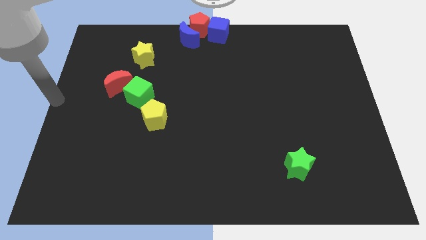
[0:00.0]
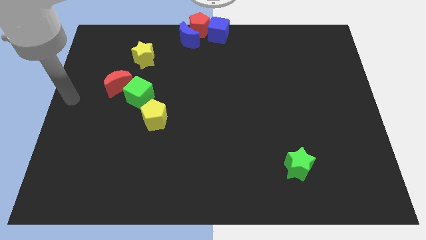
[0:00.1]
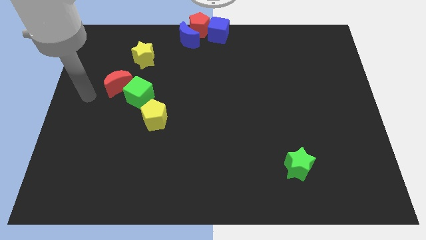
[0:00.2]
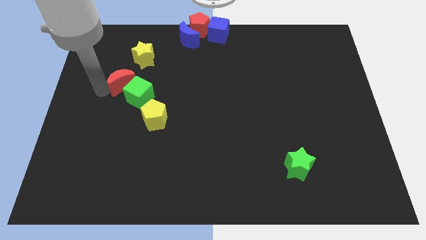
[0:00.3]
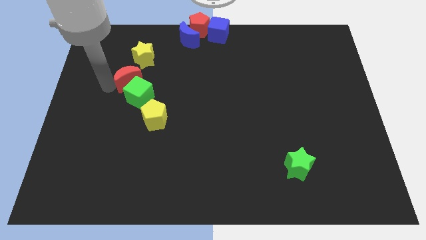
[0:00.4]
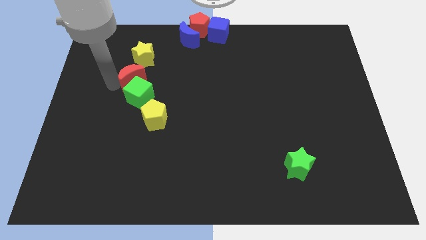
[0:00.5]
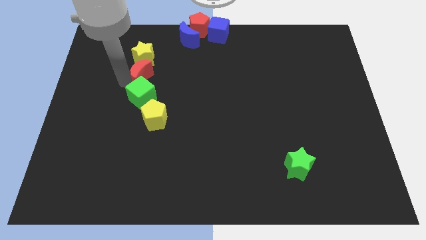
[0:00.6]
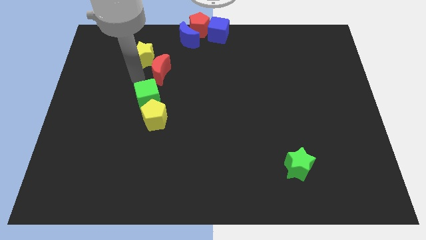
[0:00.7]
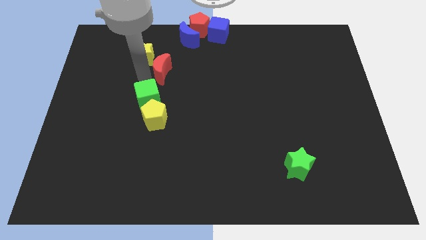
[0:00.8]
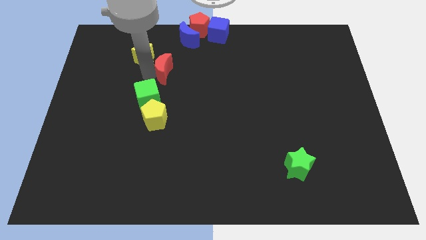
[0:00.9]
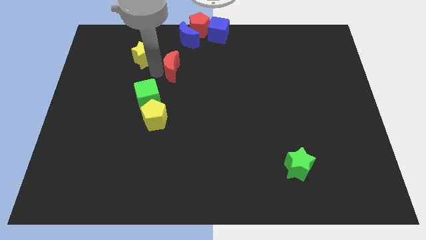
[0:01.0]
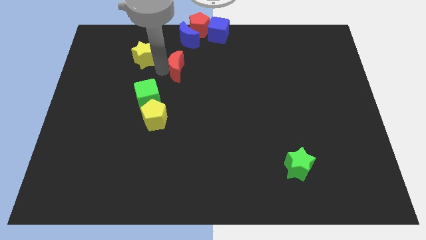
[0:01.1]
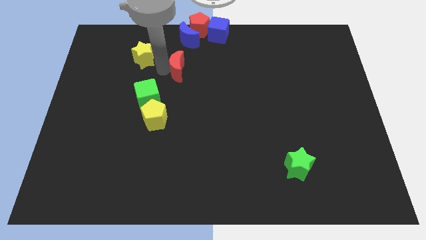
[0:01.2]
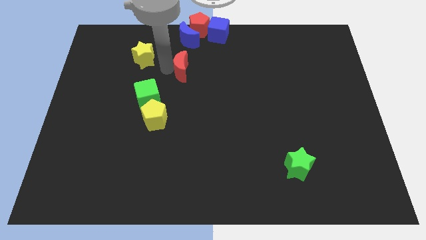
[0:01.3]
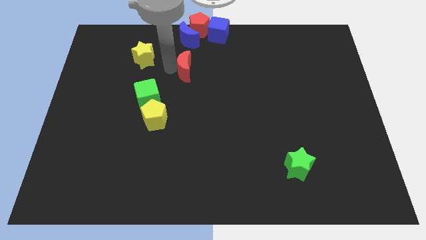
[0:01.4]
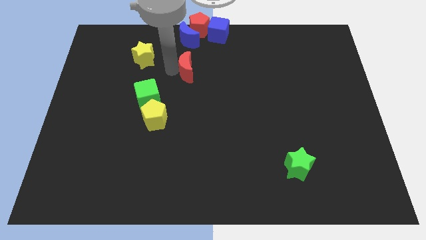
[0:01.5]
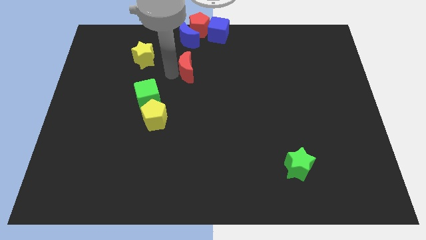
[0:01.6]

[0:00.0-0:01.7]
separate the green cube and red moon

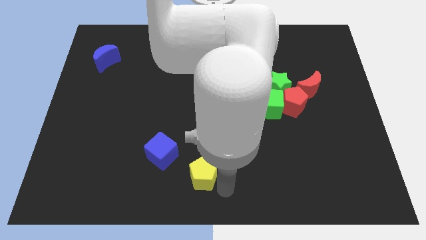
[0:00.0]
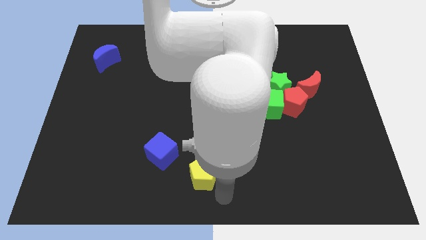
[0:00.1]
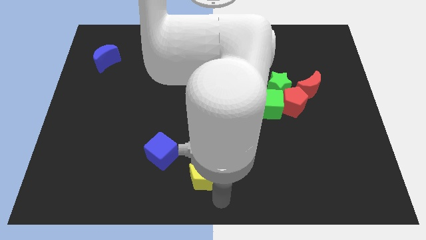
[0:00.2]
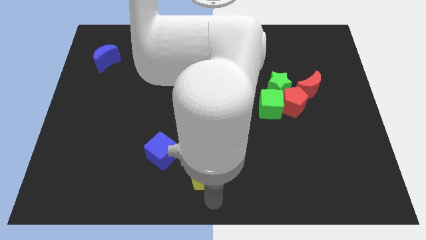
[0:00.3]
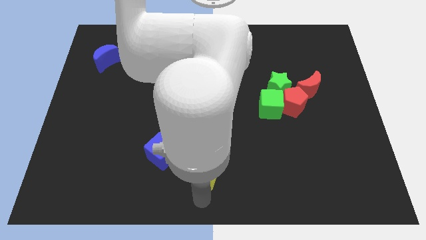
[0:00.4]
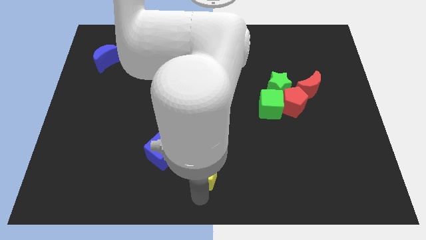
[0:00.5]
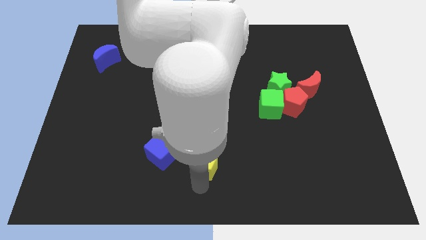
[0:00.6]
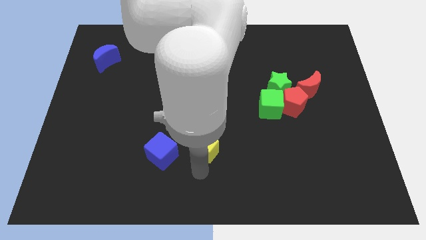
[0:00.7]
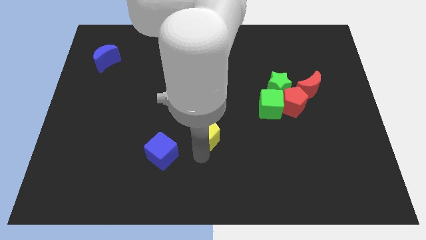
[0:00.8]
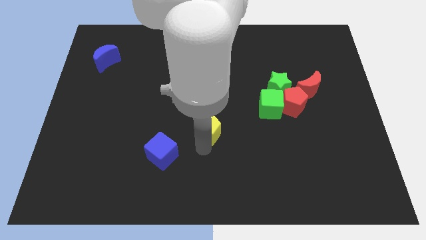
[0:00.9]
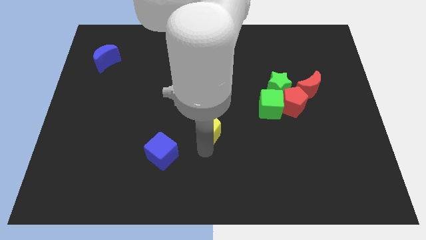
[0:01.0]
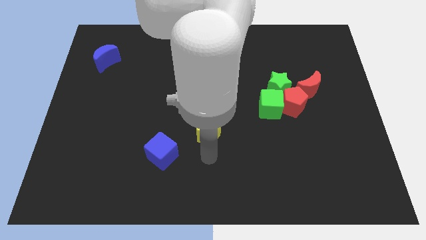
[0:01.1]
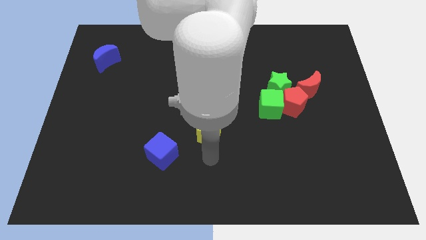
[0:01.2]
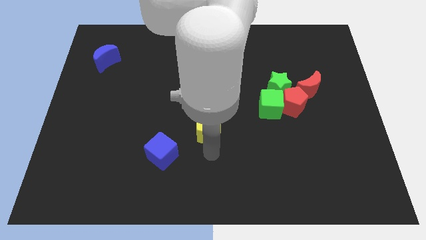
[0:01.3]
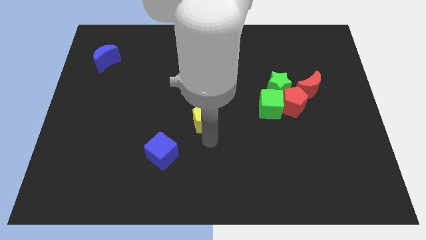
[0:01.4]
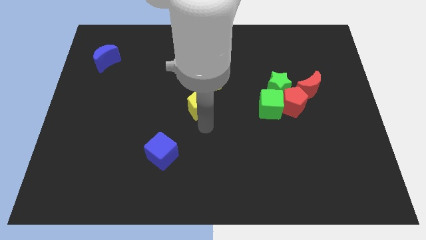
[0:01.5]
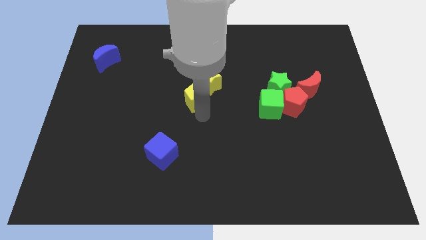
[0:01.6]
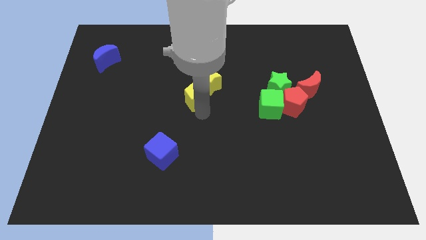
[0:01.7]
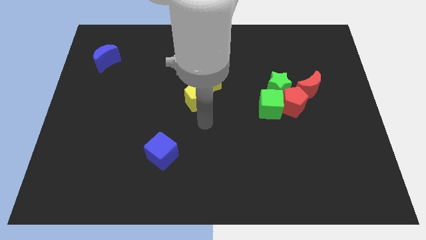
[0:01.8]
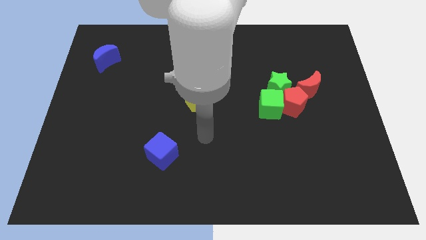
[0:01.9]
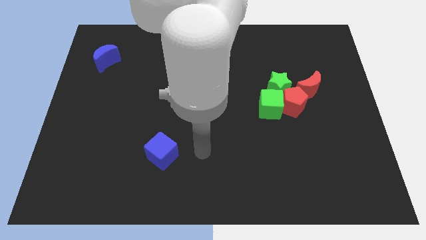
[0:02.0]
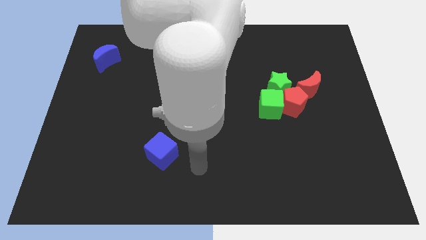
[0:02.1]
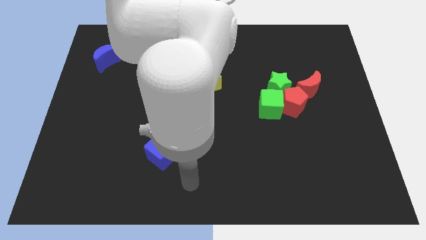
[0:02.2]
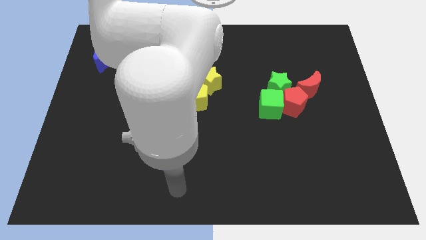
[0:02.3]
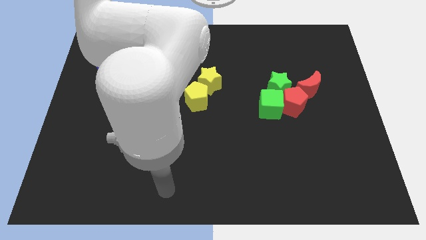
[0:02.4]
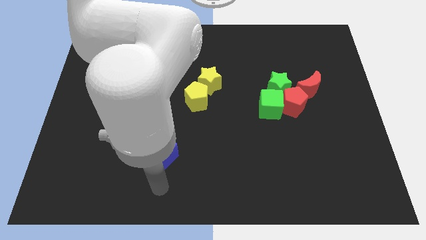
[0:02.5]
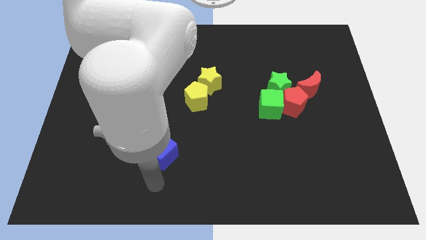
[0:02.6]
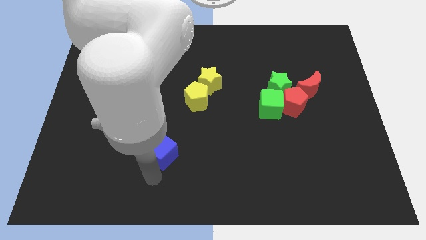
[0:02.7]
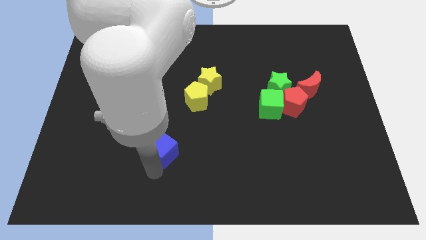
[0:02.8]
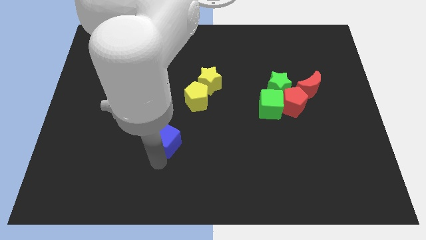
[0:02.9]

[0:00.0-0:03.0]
place the yellow pentagon below the yellow star

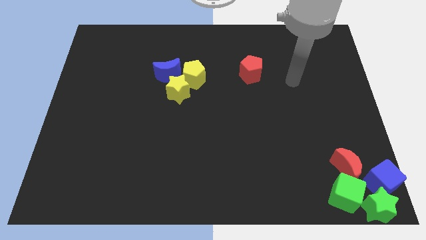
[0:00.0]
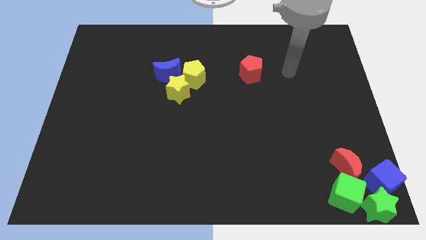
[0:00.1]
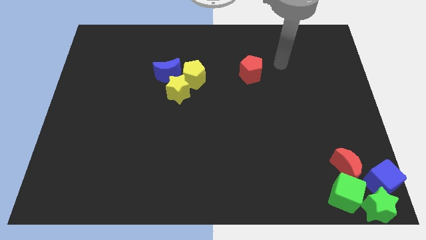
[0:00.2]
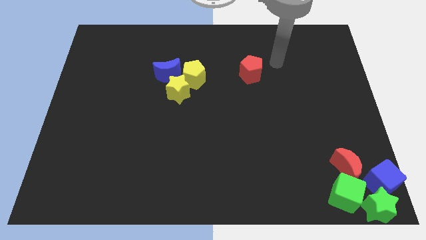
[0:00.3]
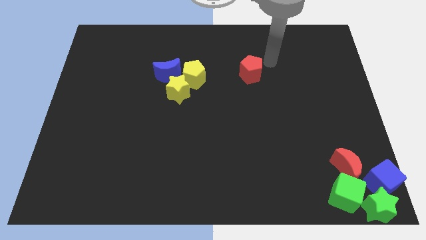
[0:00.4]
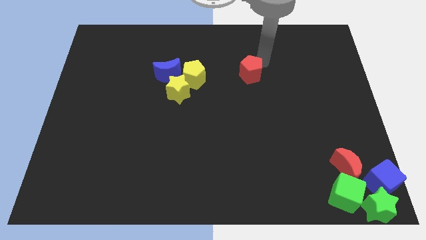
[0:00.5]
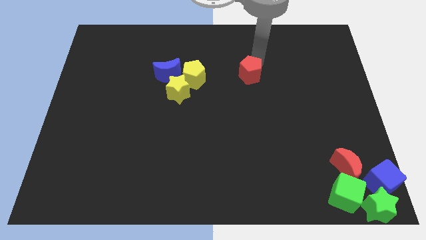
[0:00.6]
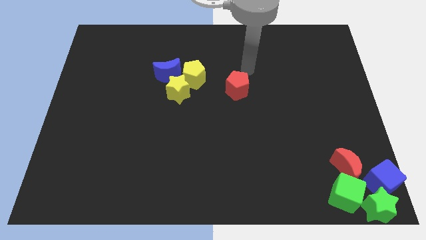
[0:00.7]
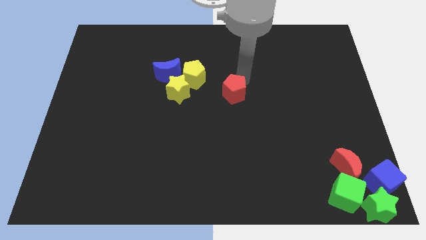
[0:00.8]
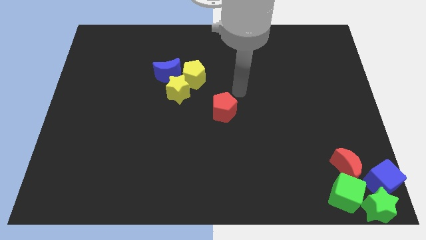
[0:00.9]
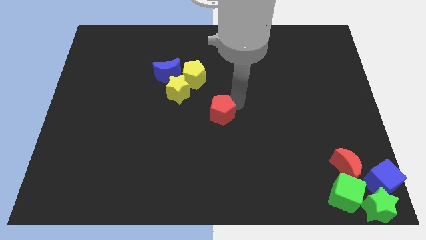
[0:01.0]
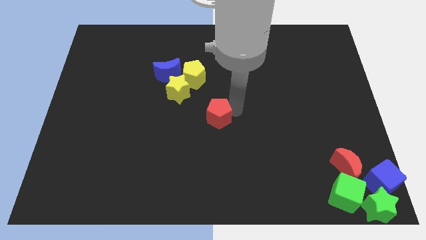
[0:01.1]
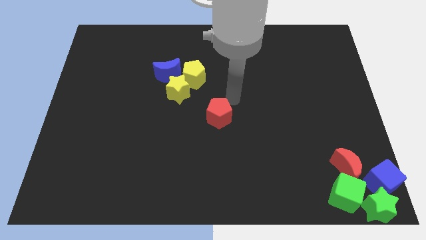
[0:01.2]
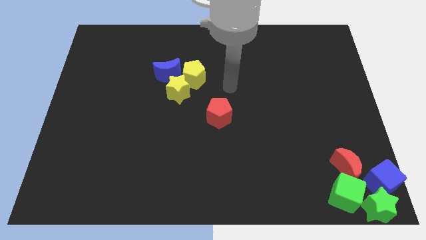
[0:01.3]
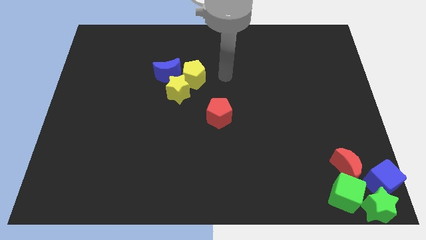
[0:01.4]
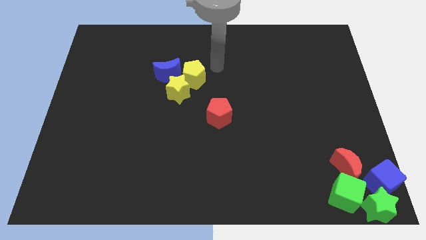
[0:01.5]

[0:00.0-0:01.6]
place the red pentagon at the center of the board

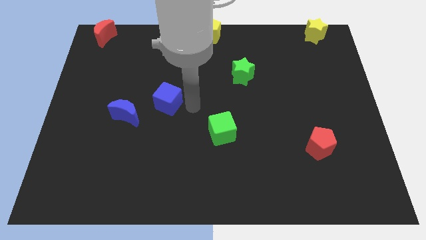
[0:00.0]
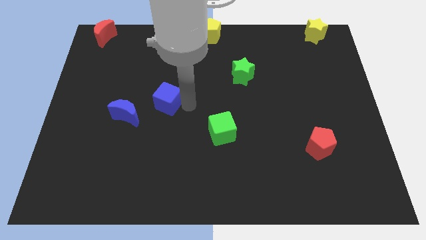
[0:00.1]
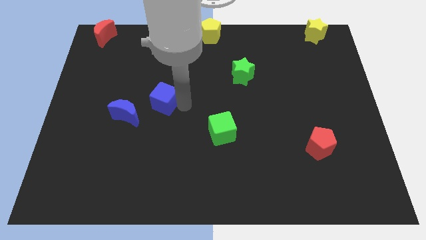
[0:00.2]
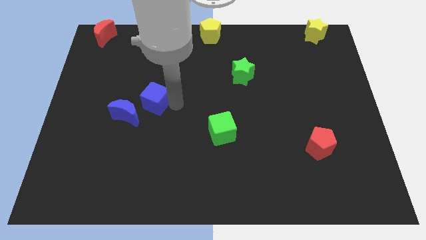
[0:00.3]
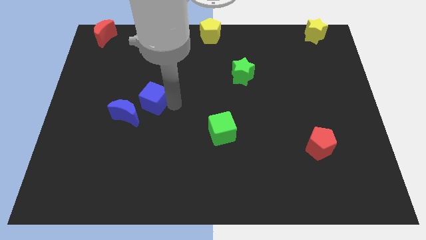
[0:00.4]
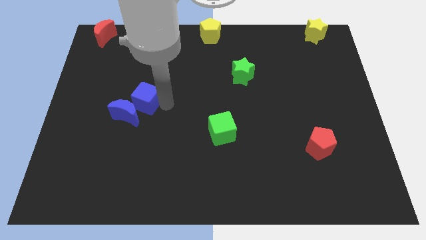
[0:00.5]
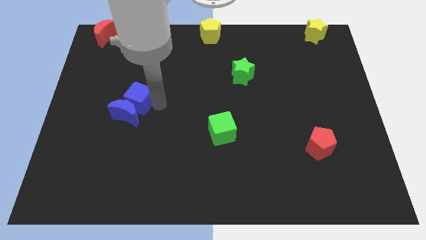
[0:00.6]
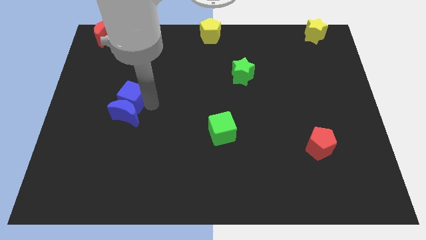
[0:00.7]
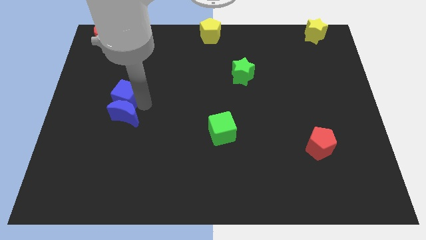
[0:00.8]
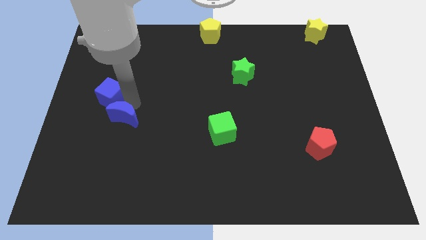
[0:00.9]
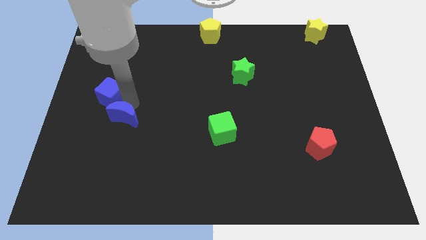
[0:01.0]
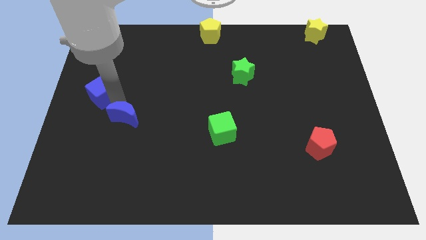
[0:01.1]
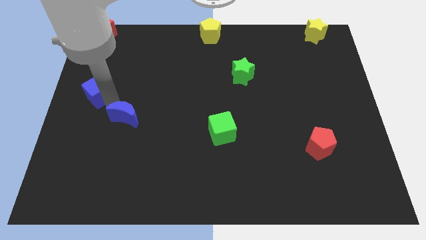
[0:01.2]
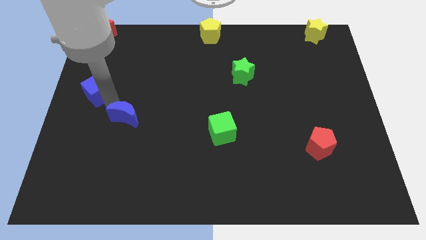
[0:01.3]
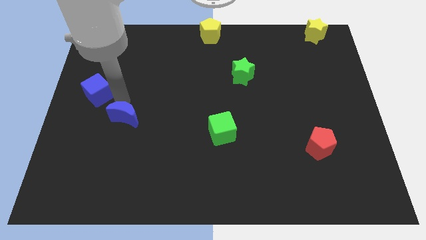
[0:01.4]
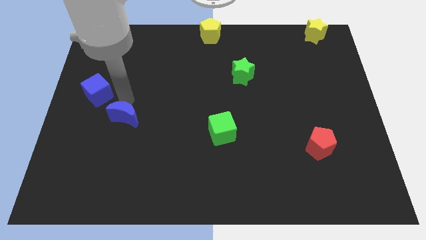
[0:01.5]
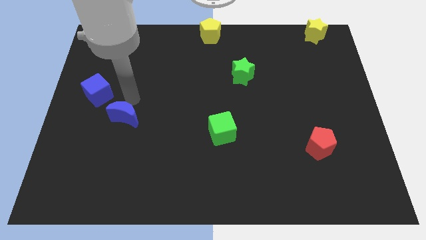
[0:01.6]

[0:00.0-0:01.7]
place the blue square diagonally to the blue moon

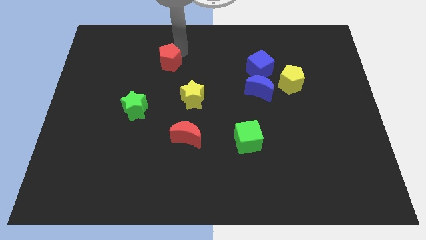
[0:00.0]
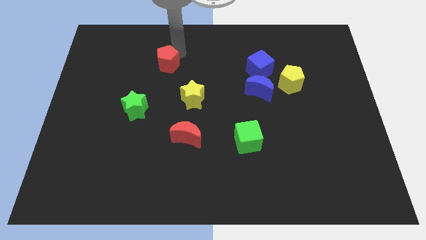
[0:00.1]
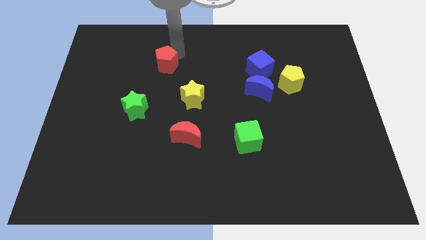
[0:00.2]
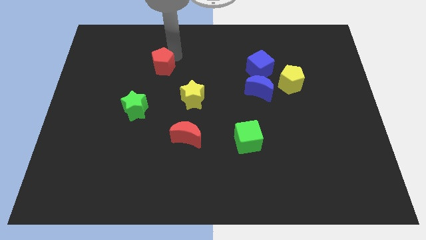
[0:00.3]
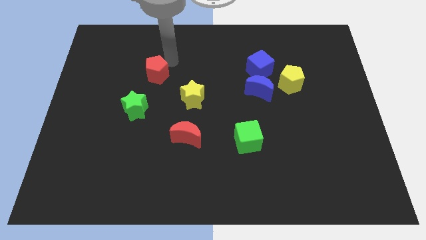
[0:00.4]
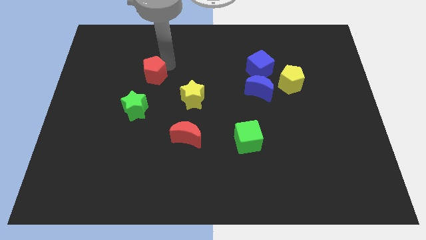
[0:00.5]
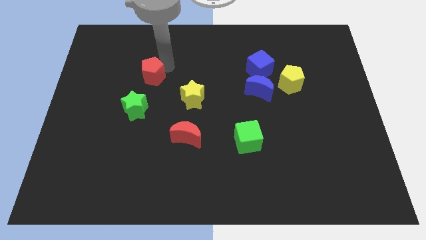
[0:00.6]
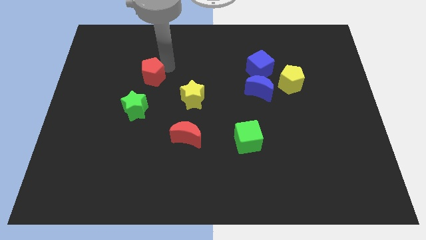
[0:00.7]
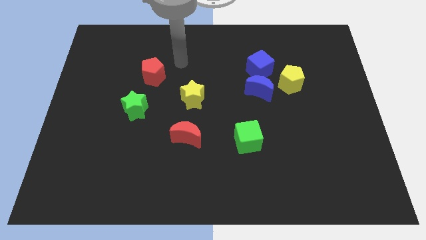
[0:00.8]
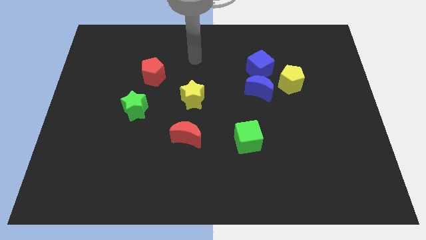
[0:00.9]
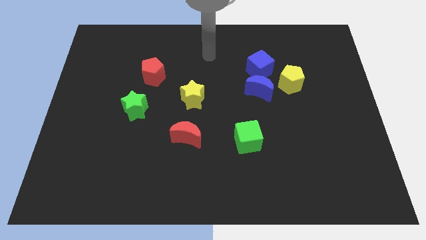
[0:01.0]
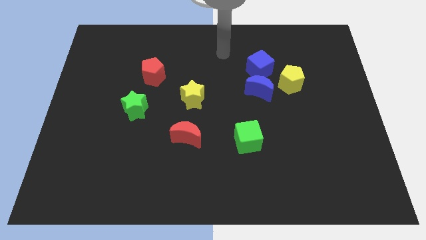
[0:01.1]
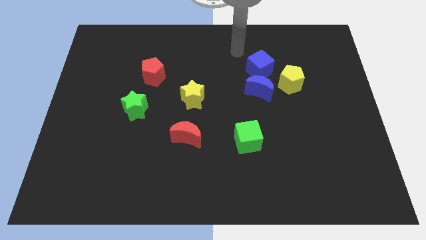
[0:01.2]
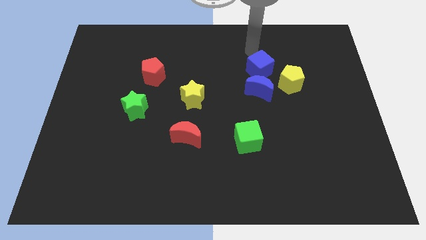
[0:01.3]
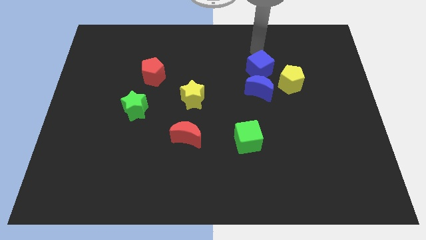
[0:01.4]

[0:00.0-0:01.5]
push the red pentagon towards the green star
